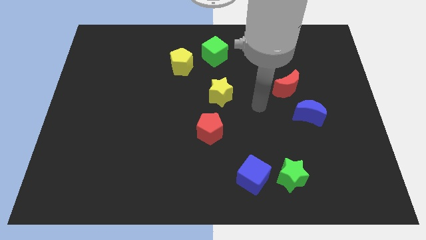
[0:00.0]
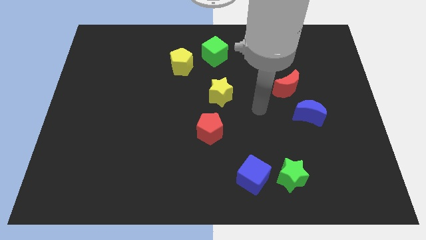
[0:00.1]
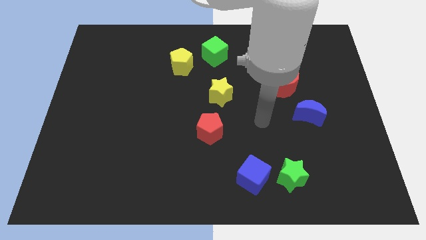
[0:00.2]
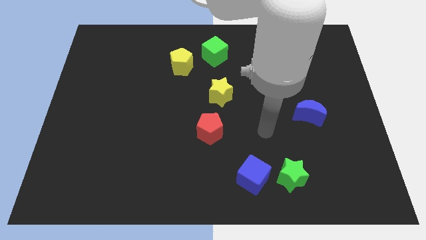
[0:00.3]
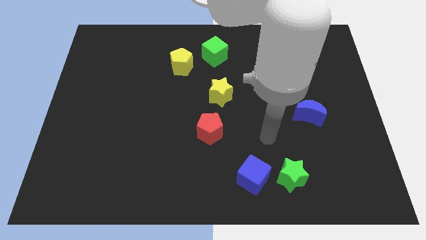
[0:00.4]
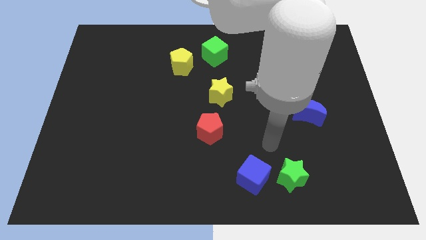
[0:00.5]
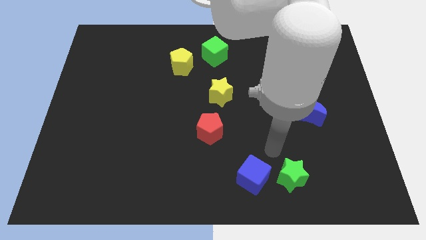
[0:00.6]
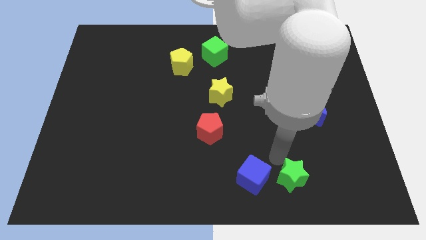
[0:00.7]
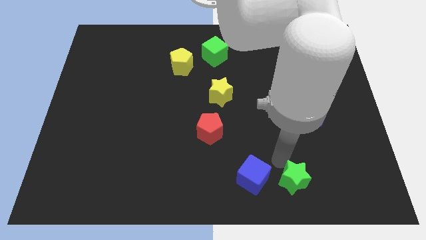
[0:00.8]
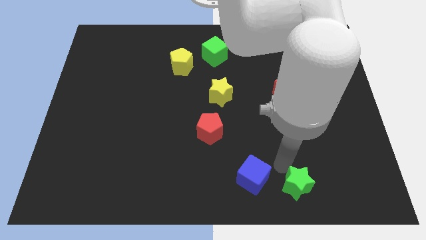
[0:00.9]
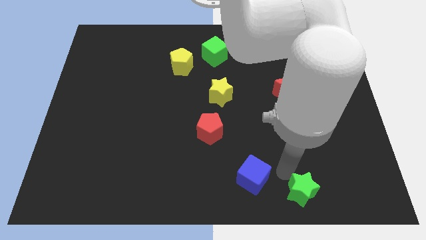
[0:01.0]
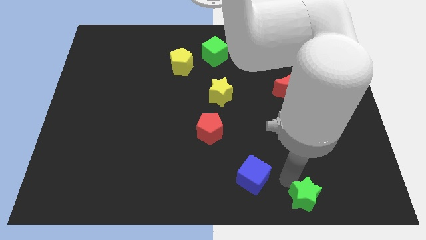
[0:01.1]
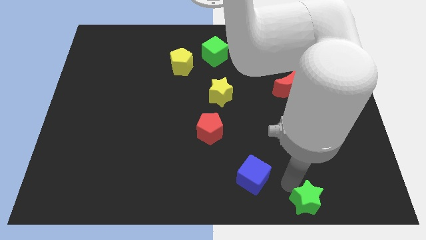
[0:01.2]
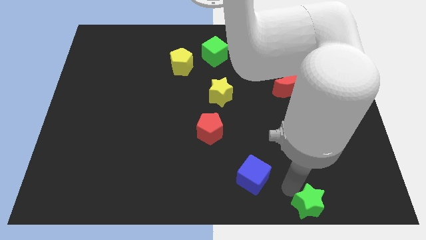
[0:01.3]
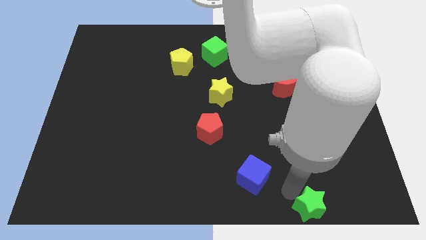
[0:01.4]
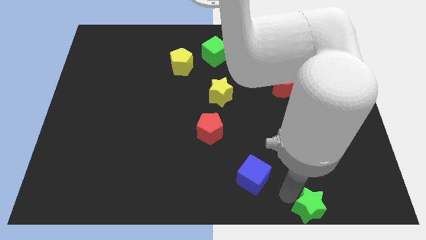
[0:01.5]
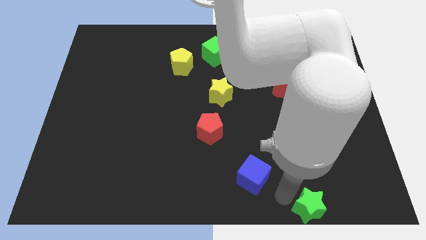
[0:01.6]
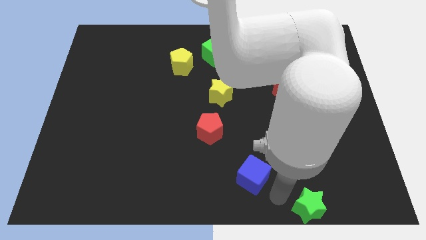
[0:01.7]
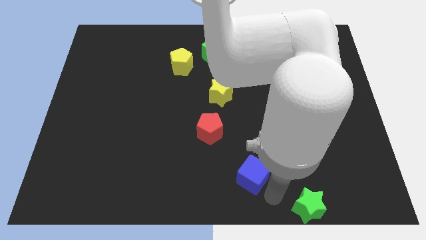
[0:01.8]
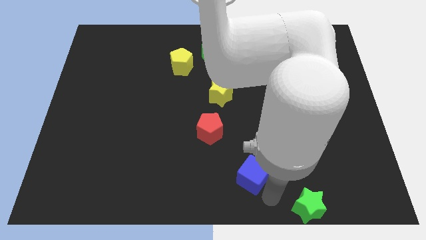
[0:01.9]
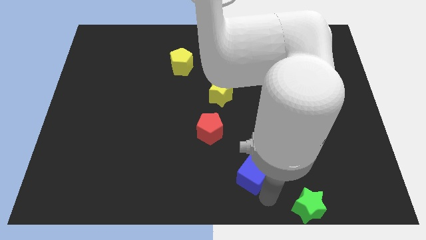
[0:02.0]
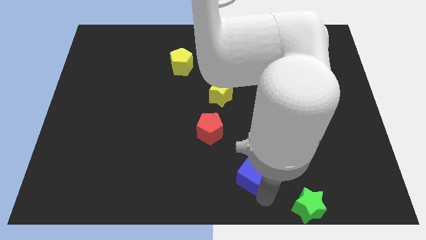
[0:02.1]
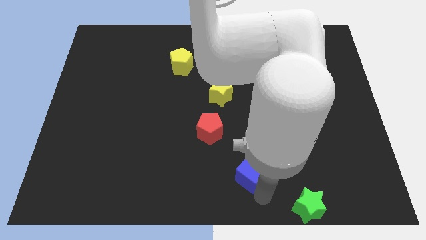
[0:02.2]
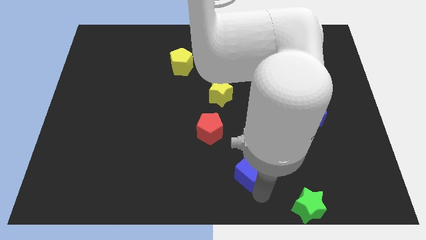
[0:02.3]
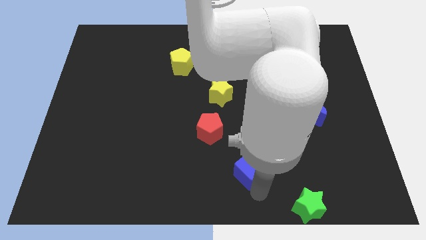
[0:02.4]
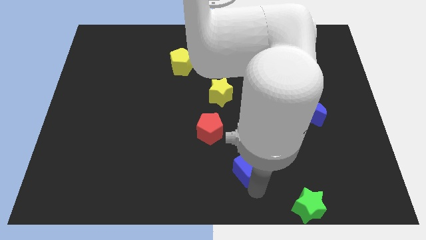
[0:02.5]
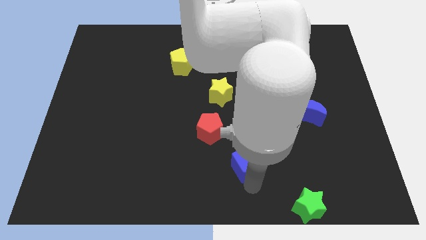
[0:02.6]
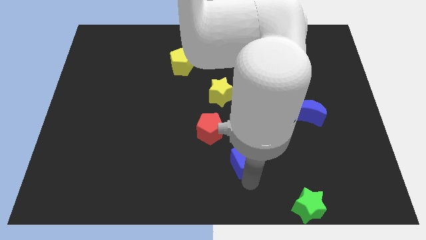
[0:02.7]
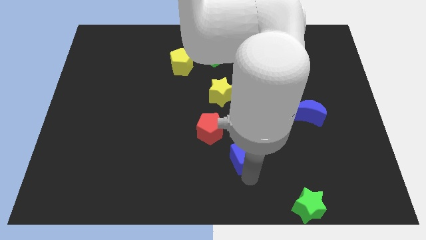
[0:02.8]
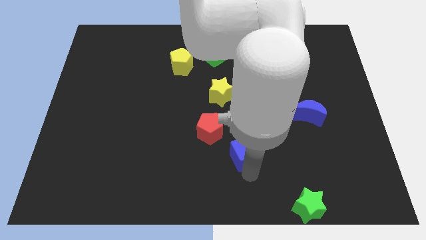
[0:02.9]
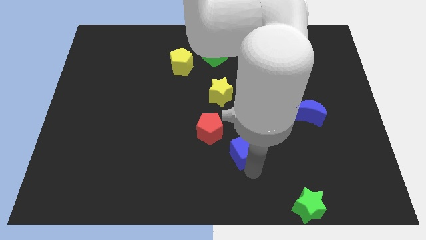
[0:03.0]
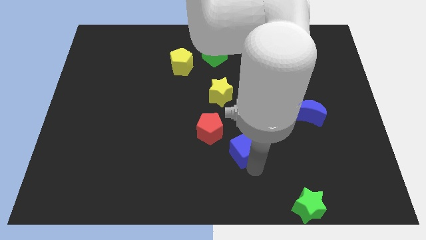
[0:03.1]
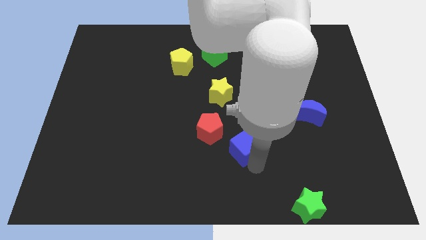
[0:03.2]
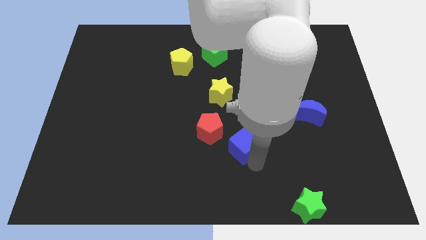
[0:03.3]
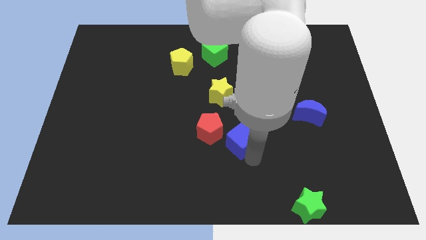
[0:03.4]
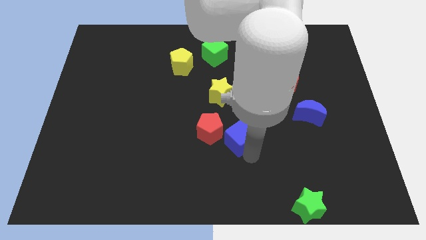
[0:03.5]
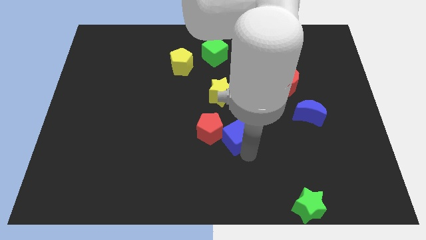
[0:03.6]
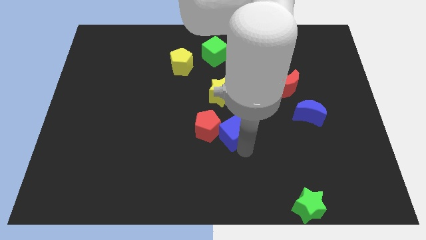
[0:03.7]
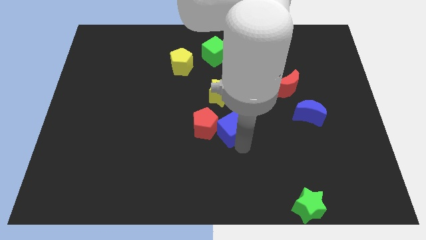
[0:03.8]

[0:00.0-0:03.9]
slide the blue cube to the red pentagon

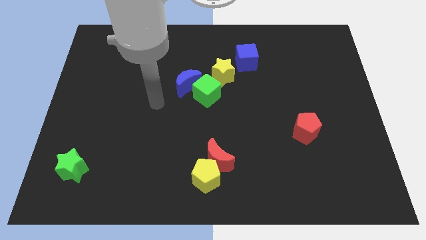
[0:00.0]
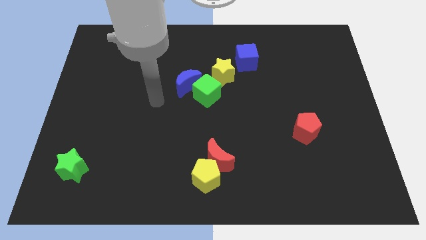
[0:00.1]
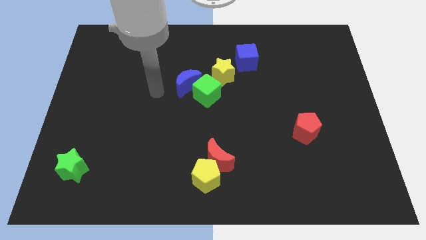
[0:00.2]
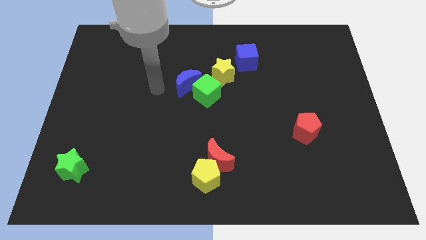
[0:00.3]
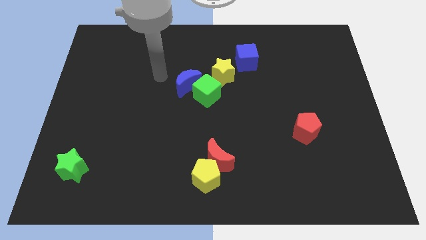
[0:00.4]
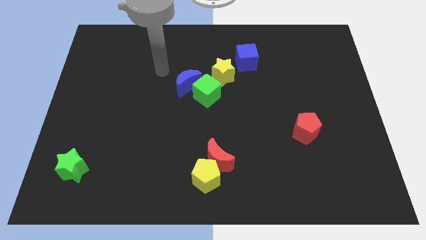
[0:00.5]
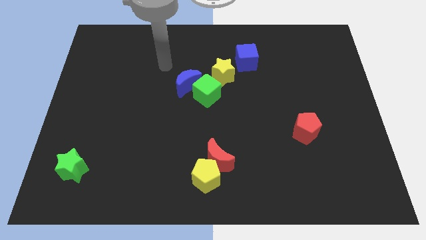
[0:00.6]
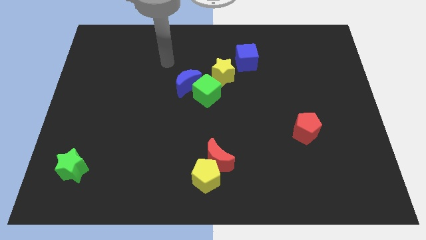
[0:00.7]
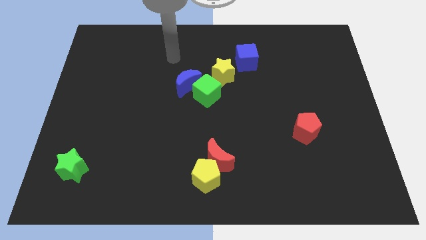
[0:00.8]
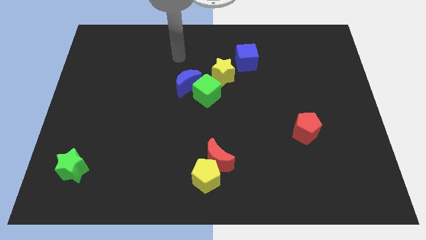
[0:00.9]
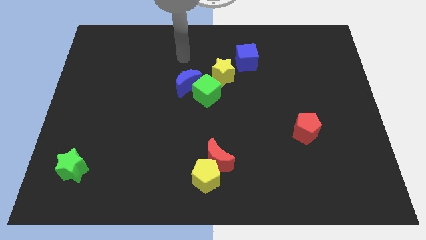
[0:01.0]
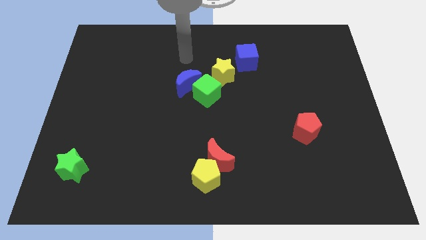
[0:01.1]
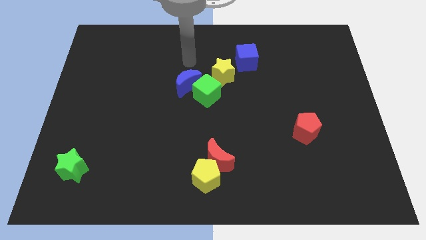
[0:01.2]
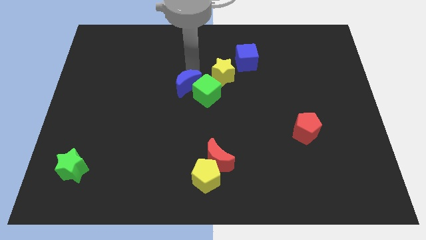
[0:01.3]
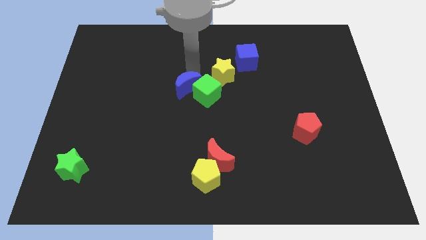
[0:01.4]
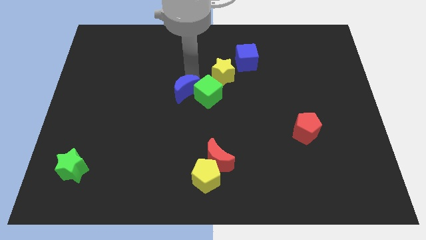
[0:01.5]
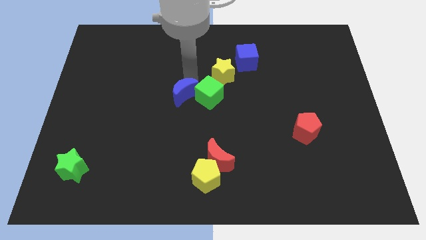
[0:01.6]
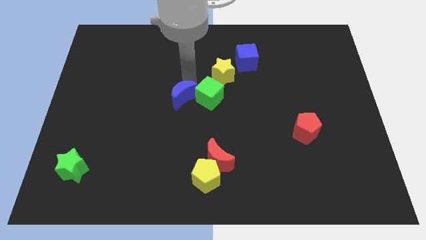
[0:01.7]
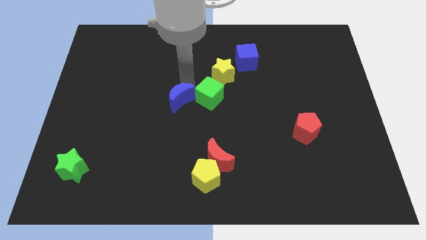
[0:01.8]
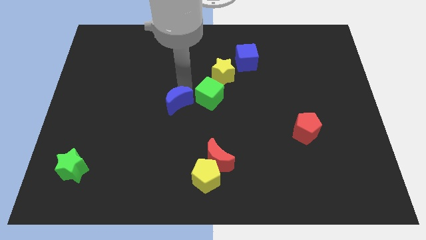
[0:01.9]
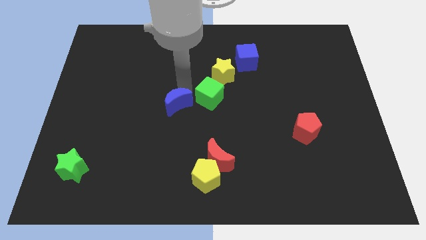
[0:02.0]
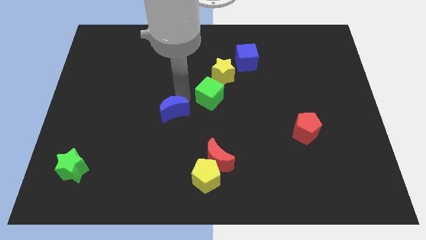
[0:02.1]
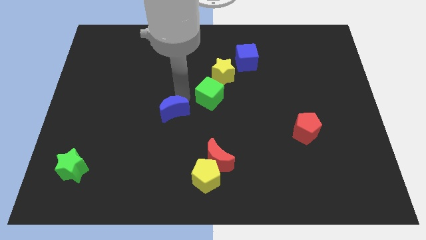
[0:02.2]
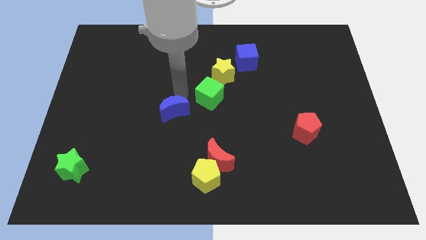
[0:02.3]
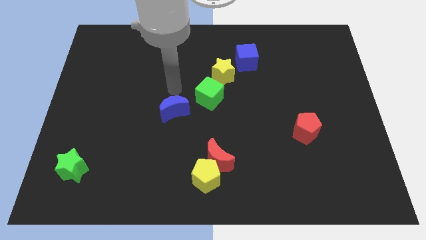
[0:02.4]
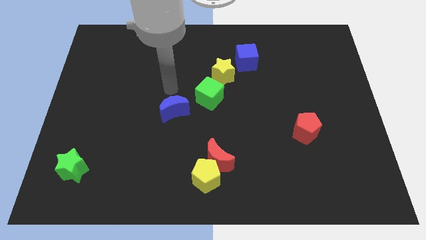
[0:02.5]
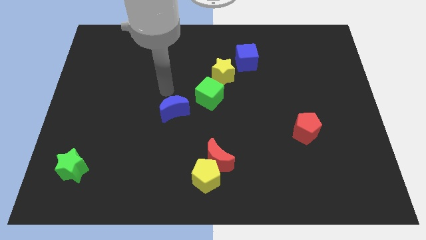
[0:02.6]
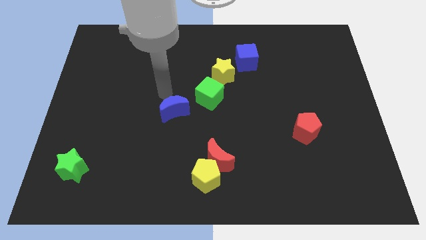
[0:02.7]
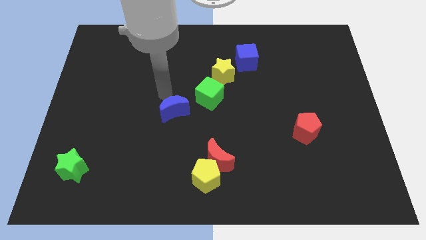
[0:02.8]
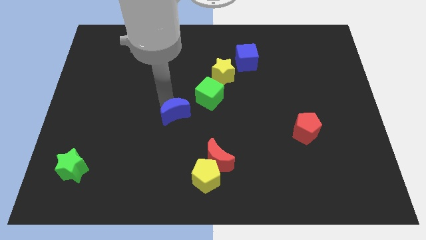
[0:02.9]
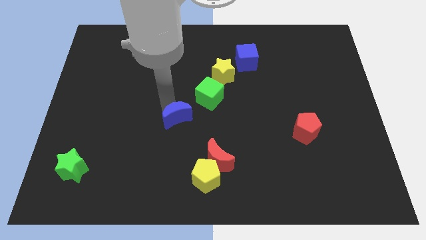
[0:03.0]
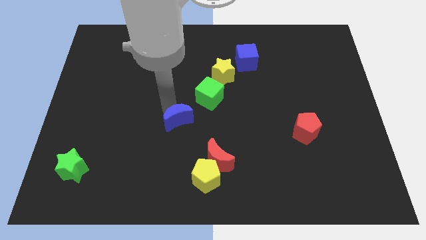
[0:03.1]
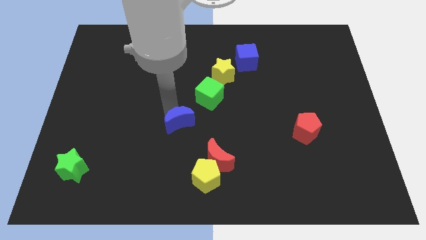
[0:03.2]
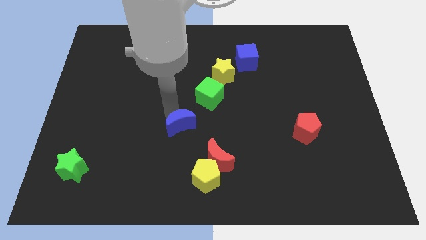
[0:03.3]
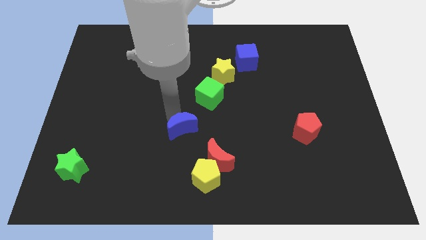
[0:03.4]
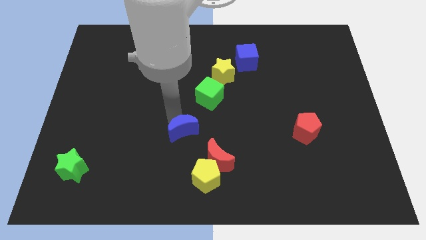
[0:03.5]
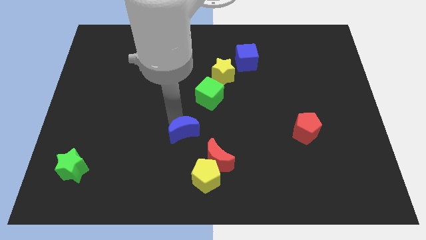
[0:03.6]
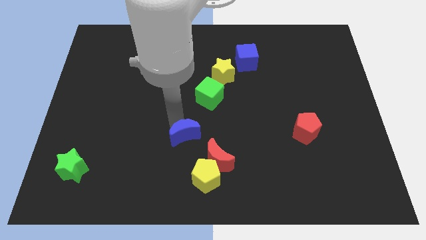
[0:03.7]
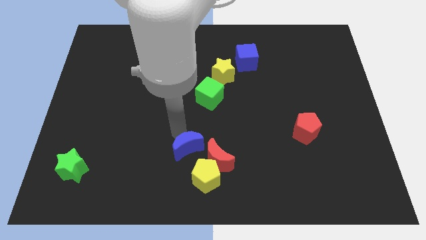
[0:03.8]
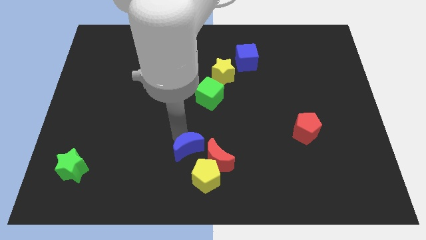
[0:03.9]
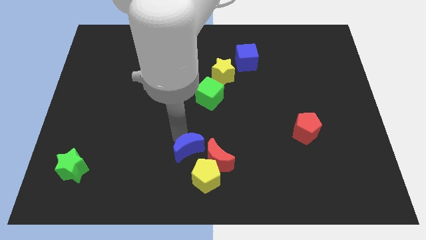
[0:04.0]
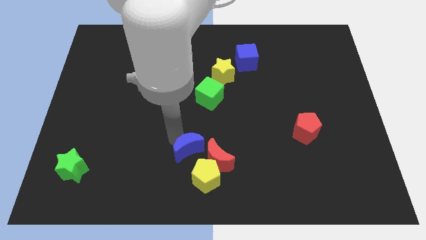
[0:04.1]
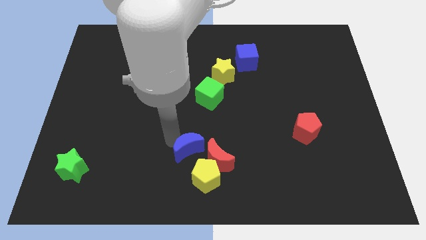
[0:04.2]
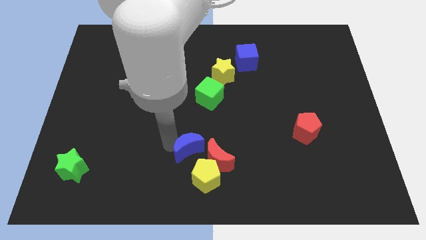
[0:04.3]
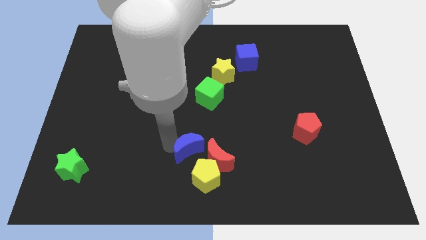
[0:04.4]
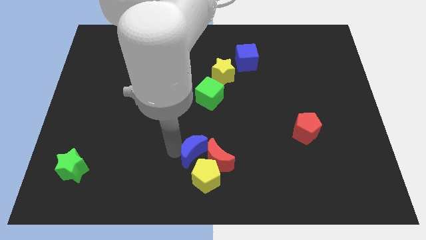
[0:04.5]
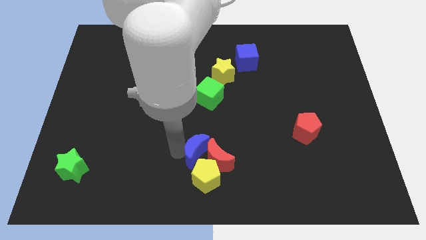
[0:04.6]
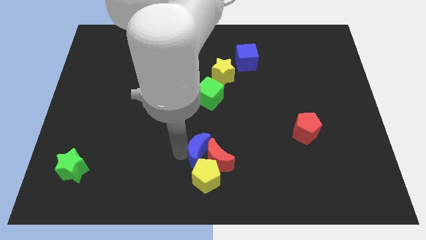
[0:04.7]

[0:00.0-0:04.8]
put the blue moon to the red moon
